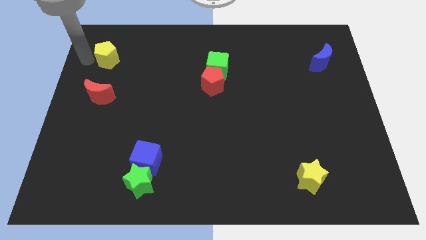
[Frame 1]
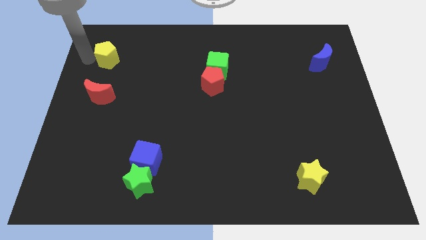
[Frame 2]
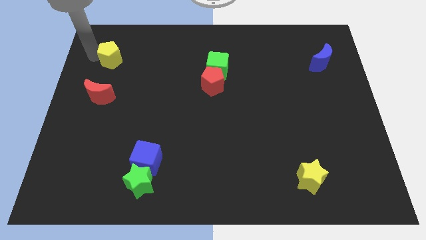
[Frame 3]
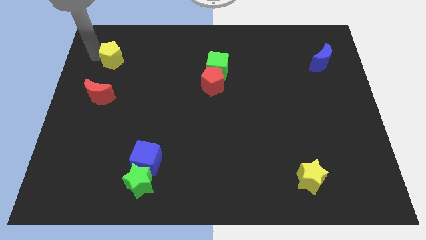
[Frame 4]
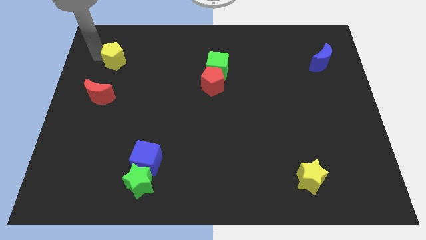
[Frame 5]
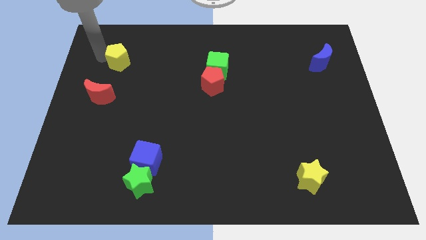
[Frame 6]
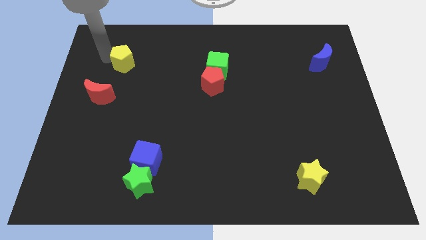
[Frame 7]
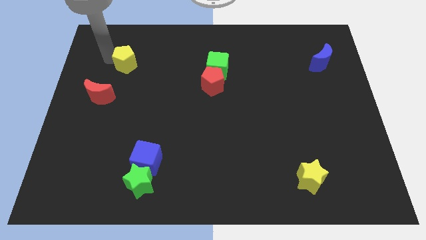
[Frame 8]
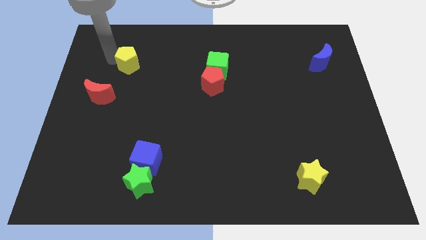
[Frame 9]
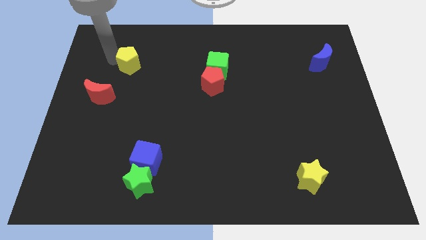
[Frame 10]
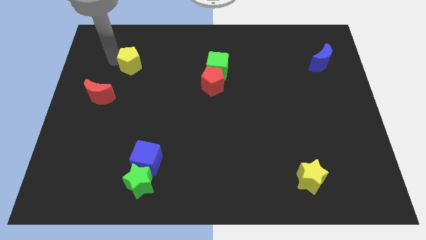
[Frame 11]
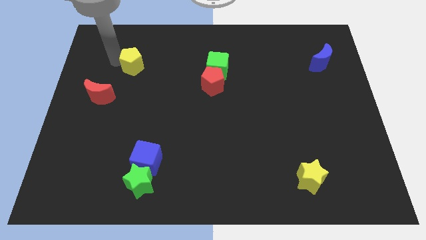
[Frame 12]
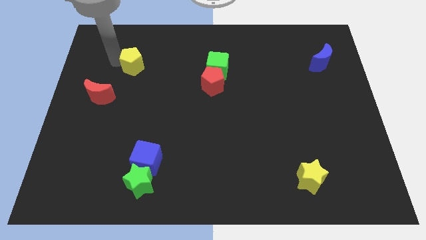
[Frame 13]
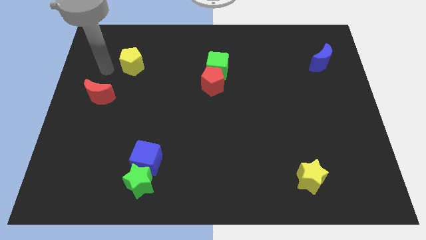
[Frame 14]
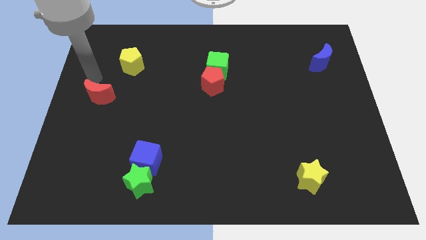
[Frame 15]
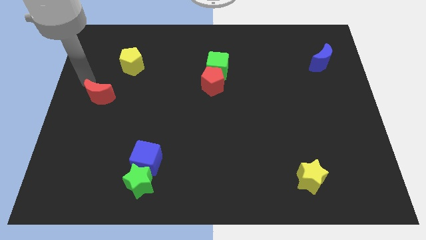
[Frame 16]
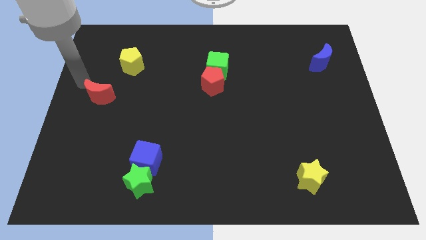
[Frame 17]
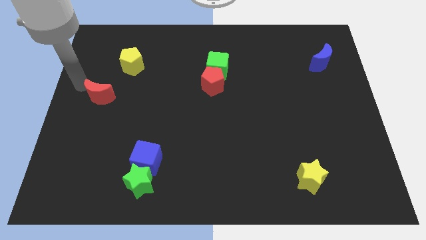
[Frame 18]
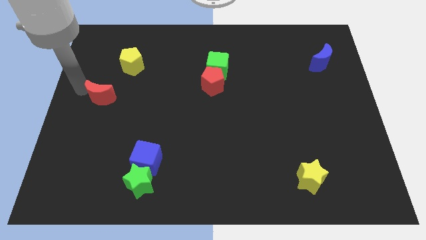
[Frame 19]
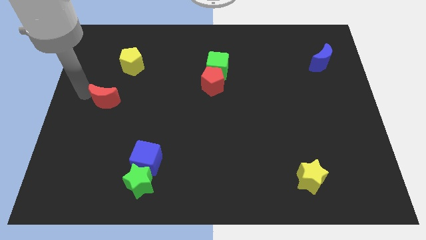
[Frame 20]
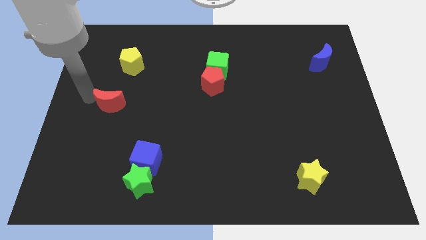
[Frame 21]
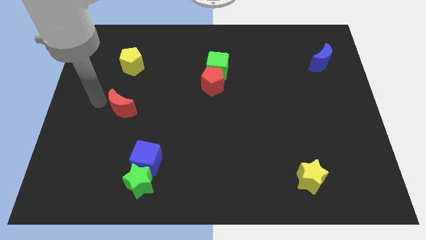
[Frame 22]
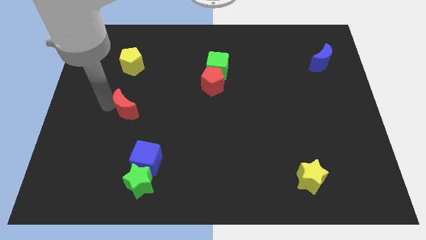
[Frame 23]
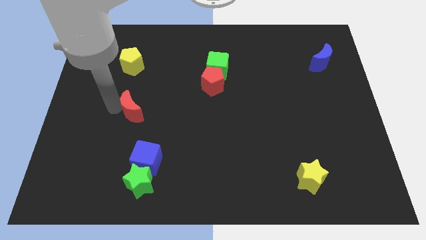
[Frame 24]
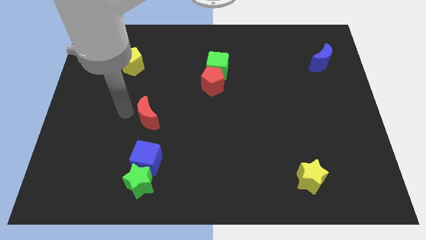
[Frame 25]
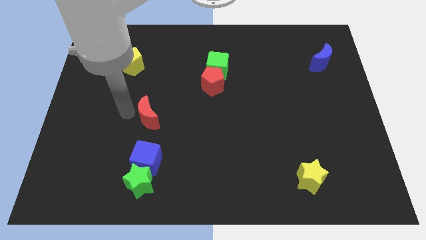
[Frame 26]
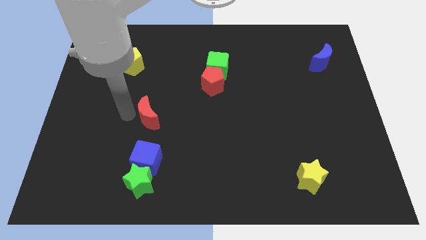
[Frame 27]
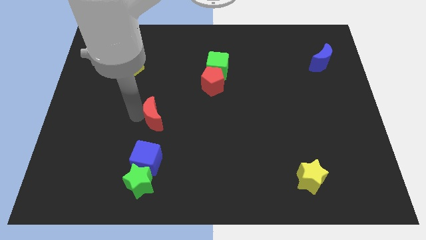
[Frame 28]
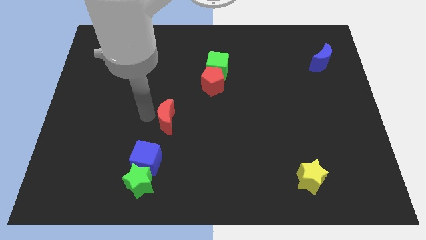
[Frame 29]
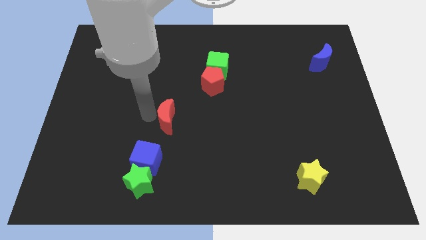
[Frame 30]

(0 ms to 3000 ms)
push the red moon diagonal to the red pentagon

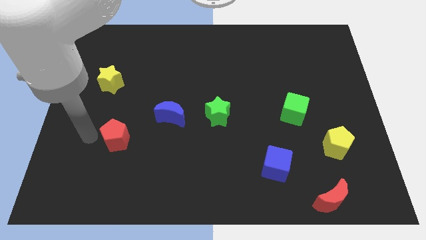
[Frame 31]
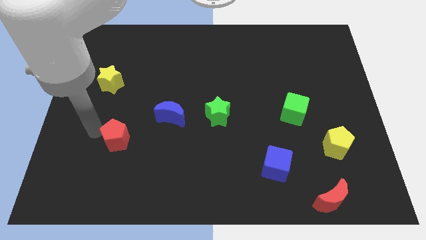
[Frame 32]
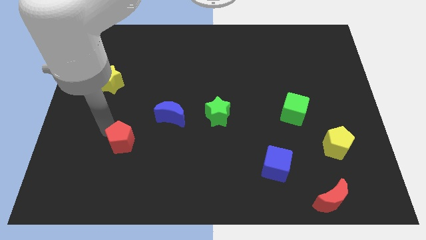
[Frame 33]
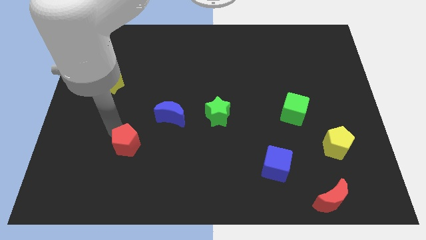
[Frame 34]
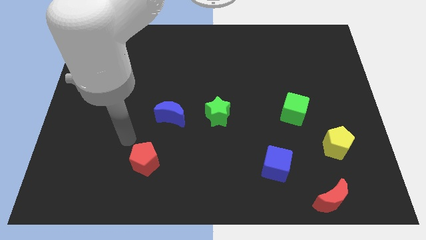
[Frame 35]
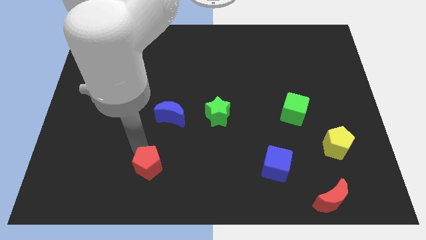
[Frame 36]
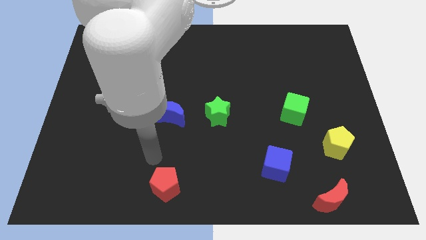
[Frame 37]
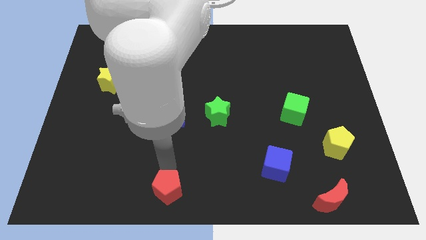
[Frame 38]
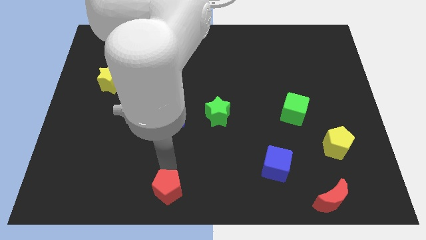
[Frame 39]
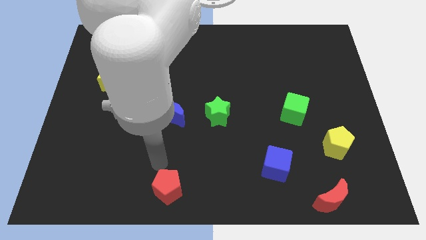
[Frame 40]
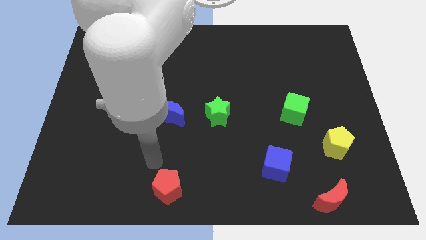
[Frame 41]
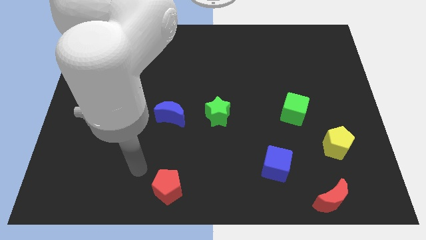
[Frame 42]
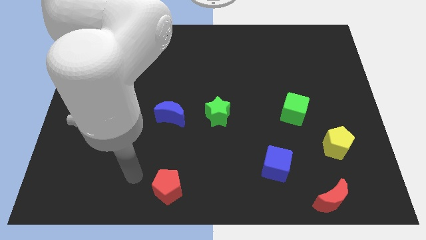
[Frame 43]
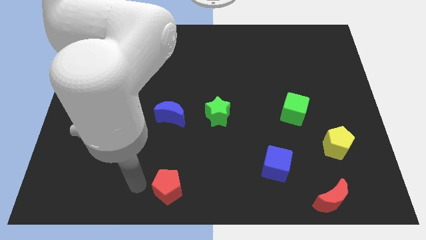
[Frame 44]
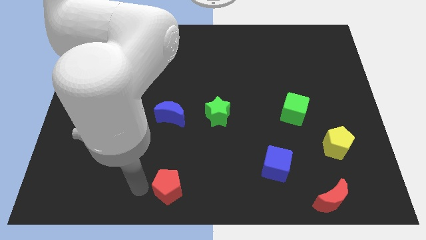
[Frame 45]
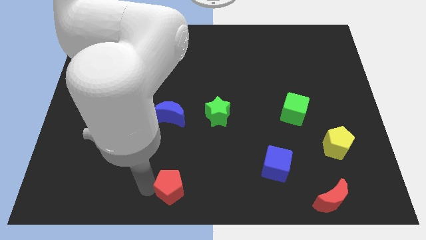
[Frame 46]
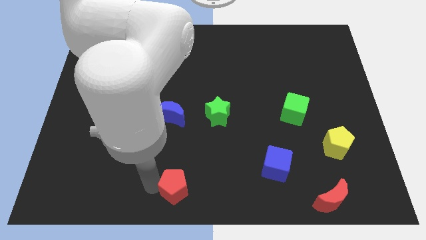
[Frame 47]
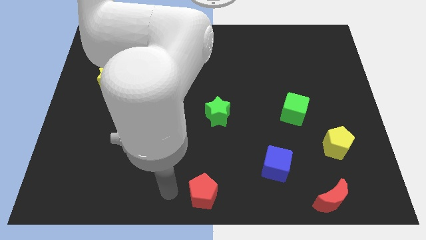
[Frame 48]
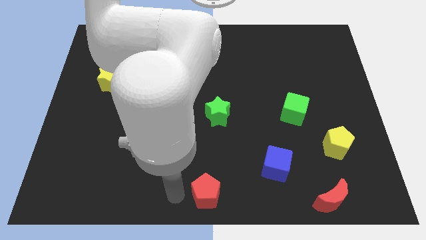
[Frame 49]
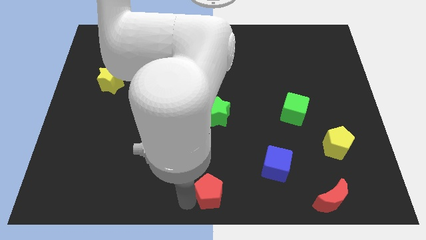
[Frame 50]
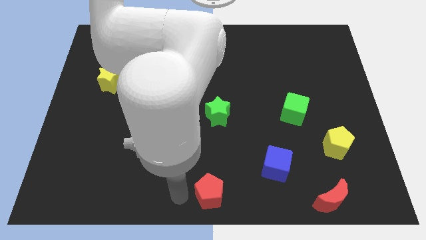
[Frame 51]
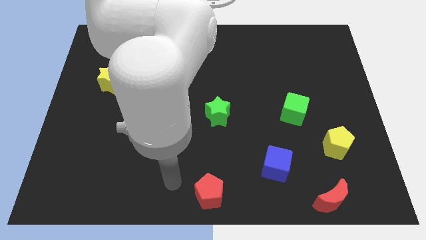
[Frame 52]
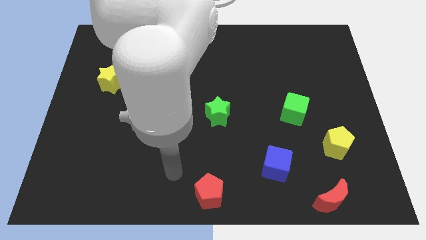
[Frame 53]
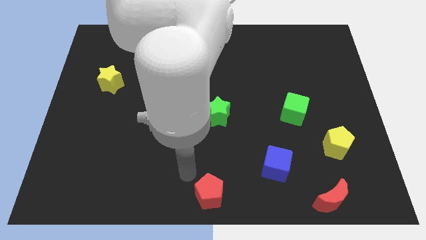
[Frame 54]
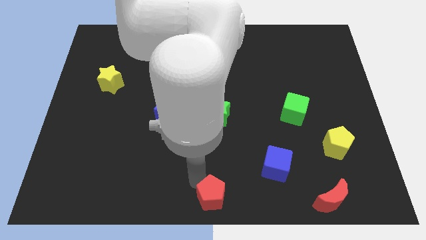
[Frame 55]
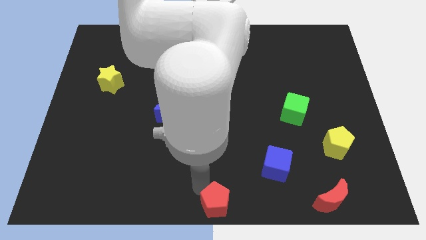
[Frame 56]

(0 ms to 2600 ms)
put red pentagon at the bottom center of the board

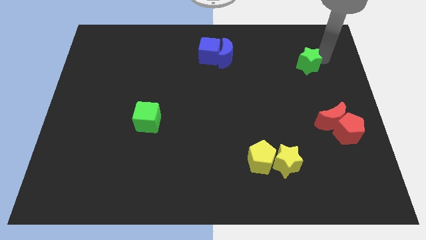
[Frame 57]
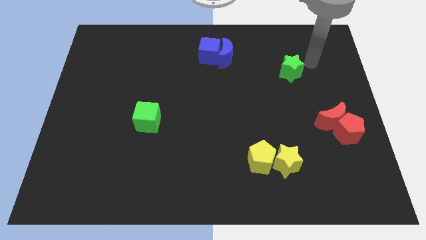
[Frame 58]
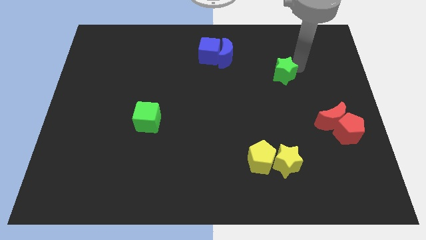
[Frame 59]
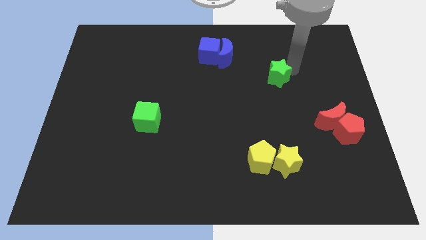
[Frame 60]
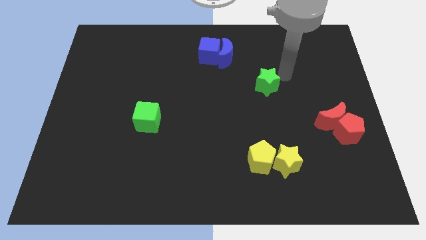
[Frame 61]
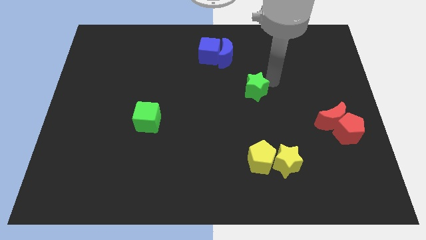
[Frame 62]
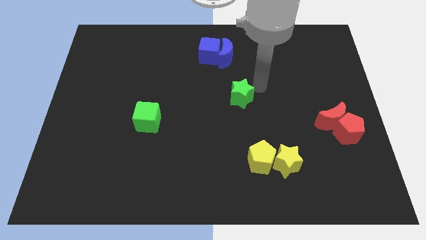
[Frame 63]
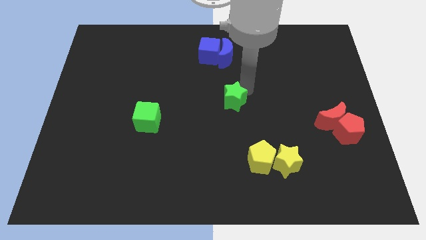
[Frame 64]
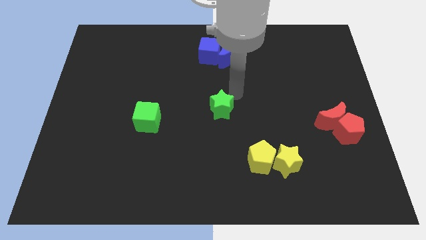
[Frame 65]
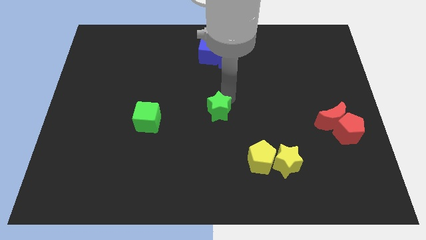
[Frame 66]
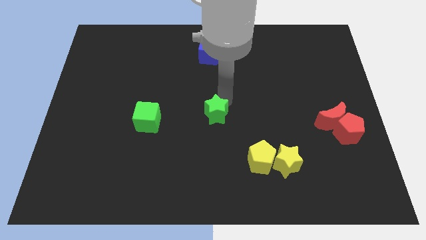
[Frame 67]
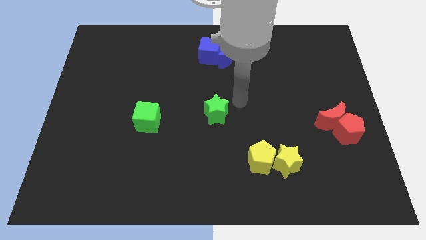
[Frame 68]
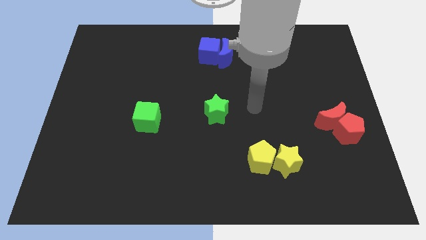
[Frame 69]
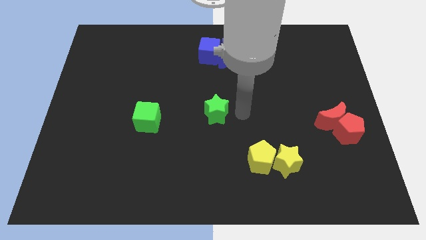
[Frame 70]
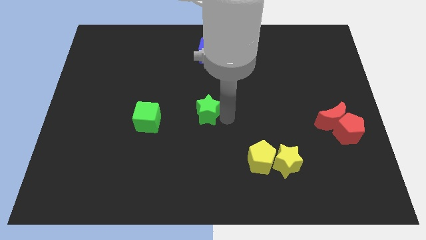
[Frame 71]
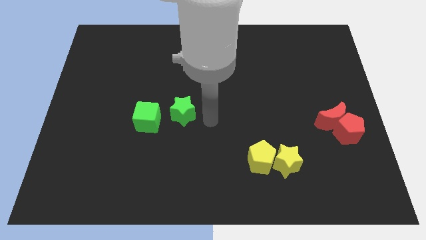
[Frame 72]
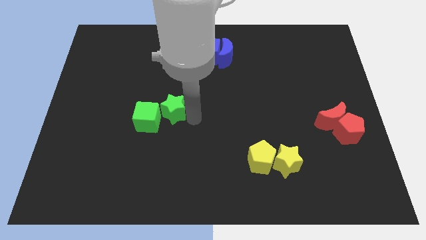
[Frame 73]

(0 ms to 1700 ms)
move the green star to the right of the green cube

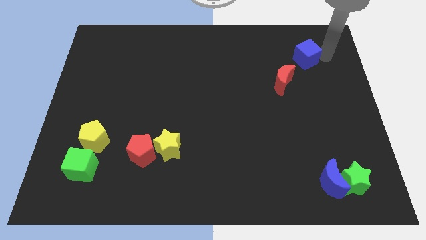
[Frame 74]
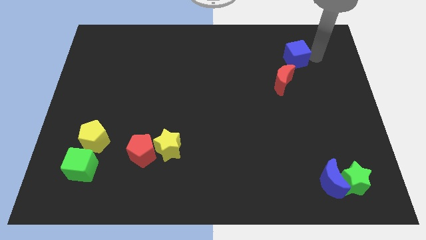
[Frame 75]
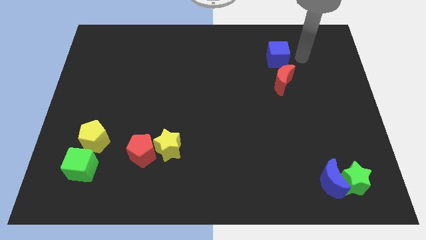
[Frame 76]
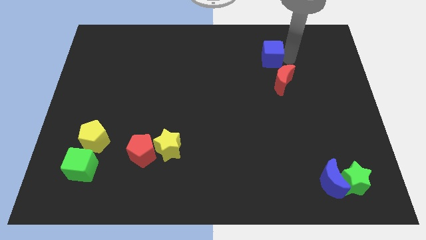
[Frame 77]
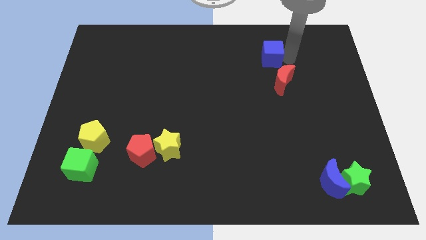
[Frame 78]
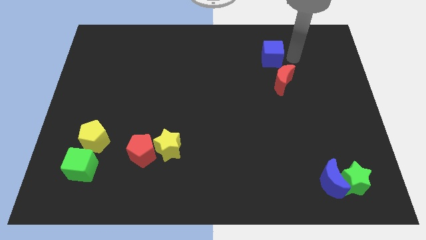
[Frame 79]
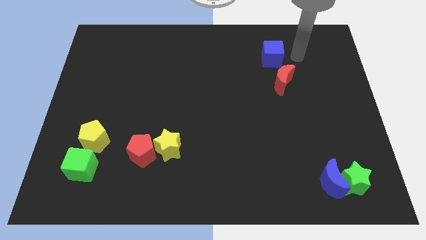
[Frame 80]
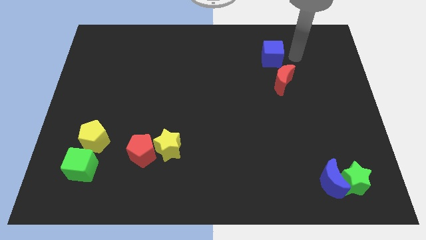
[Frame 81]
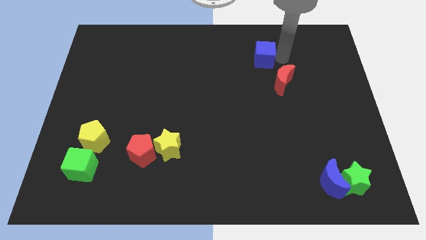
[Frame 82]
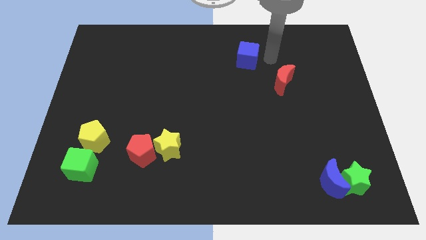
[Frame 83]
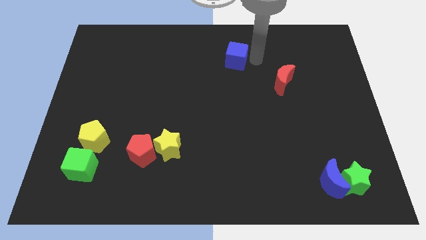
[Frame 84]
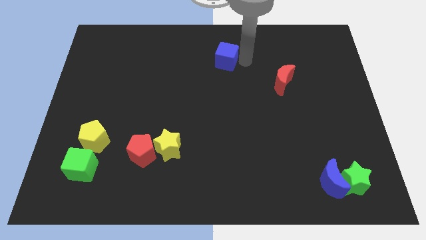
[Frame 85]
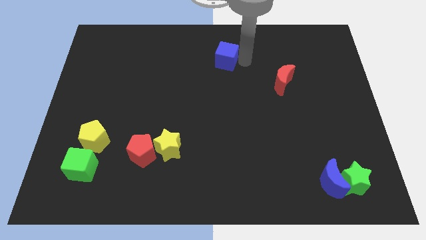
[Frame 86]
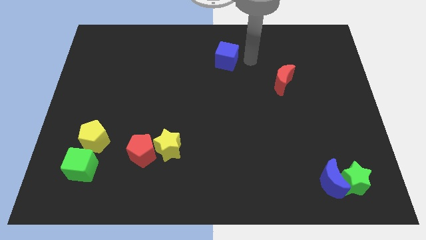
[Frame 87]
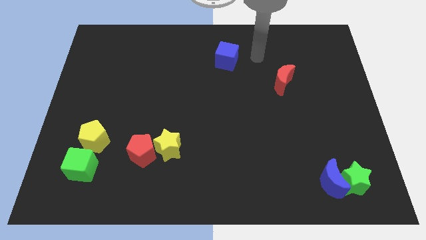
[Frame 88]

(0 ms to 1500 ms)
push the blue cube towards the center of the board

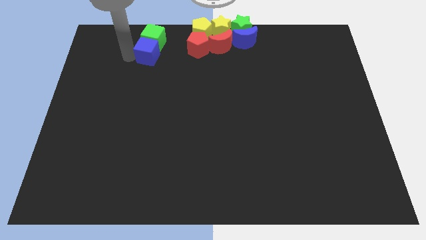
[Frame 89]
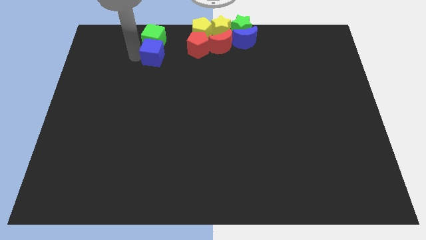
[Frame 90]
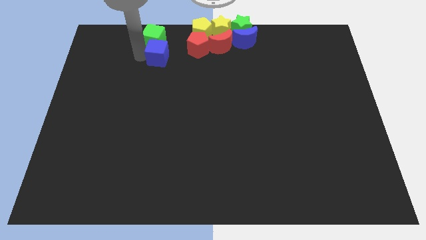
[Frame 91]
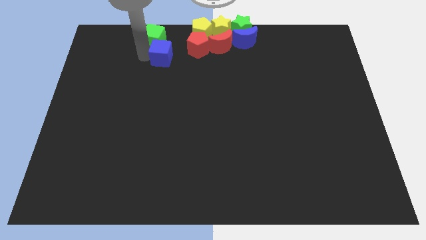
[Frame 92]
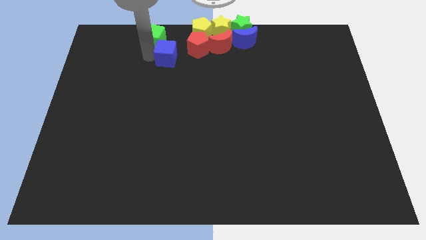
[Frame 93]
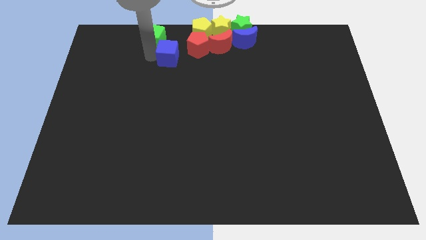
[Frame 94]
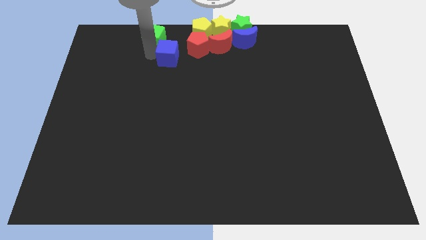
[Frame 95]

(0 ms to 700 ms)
move the blue cube to the right
